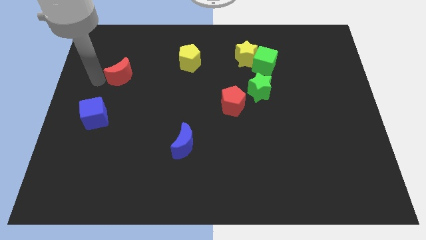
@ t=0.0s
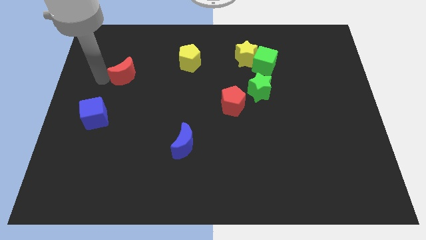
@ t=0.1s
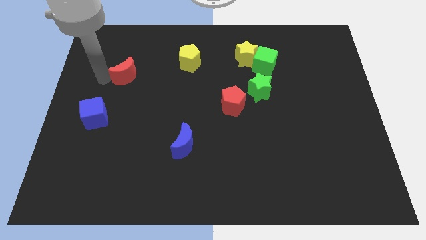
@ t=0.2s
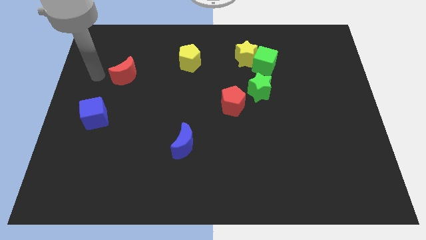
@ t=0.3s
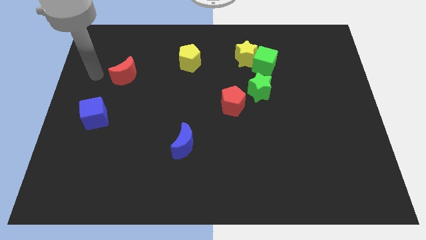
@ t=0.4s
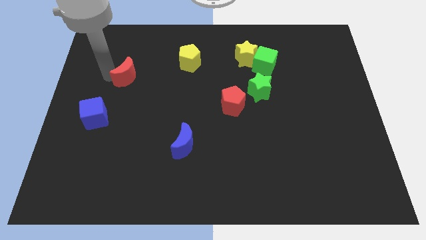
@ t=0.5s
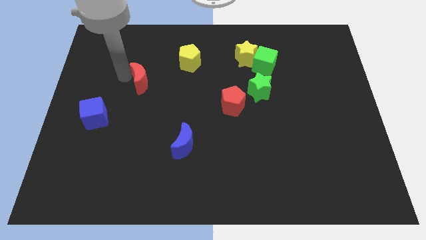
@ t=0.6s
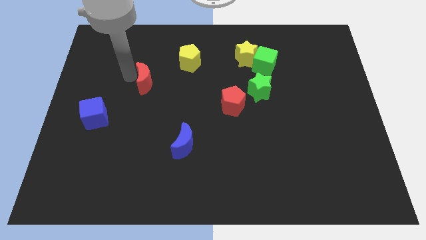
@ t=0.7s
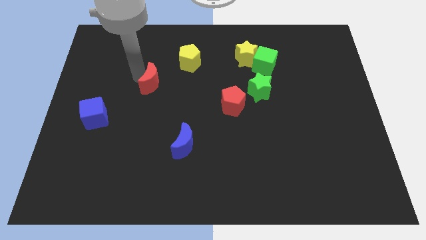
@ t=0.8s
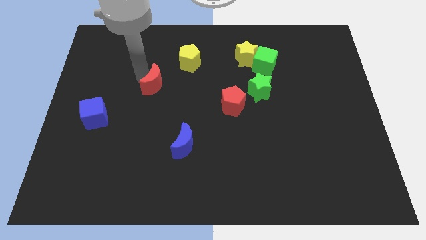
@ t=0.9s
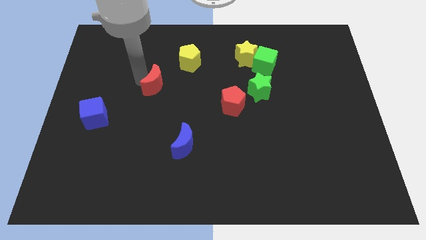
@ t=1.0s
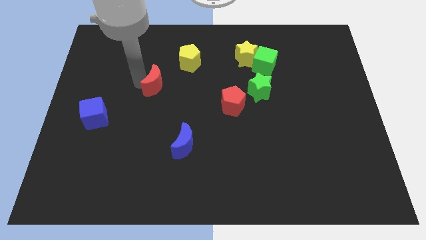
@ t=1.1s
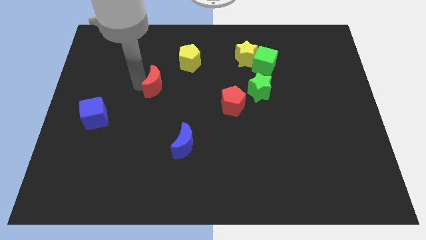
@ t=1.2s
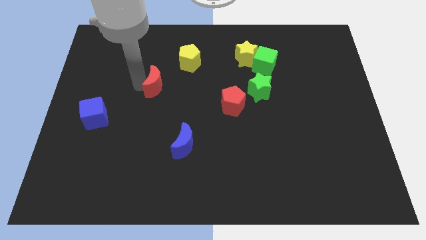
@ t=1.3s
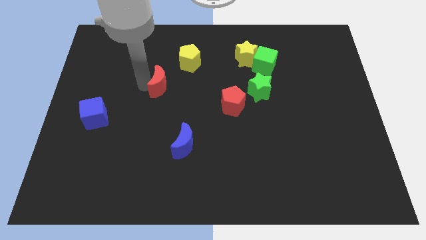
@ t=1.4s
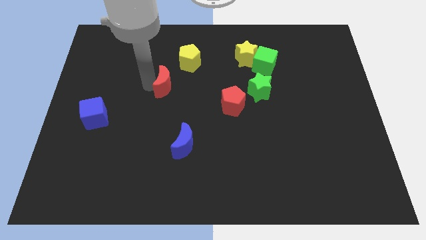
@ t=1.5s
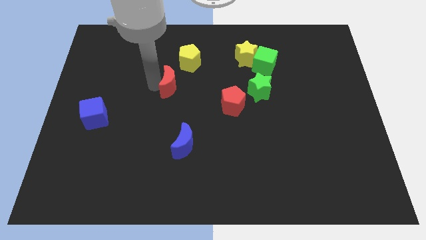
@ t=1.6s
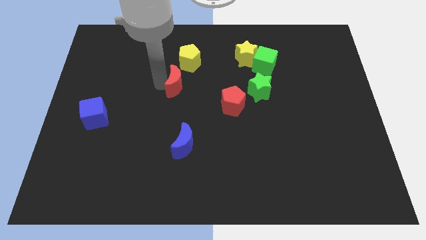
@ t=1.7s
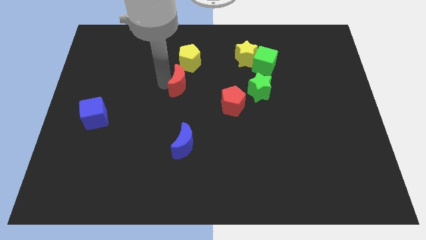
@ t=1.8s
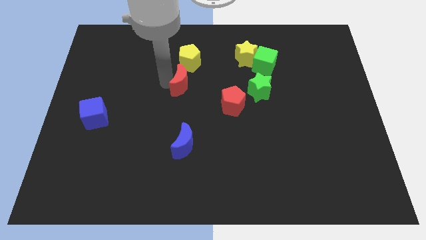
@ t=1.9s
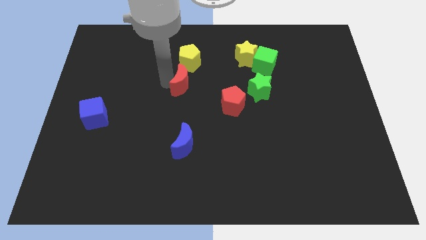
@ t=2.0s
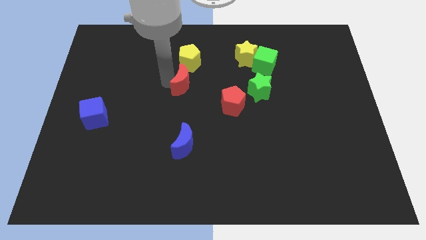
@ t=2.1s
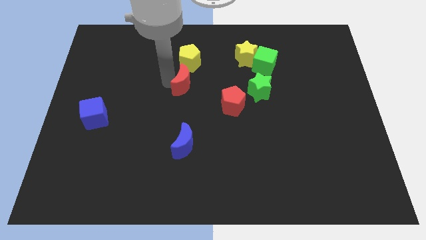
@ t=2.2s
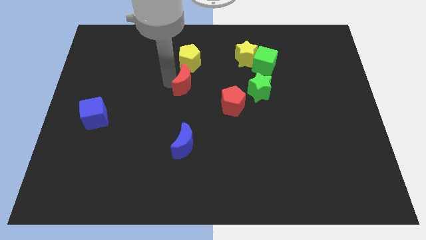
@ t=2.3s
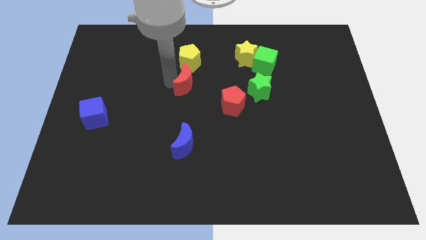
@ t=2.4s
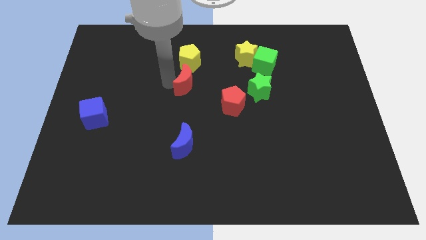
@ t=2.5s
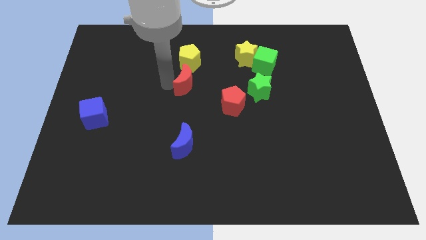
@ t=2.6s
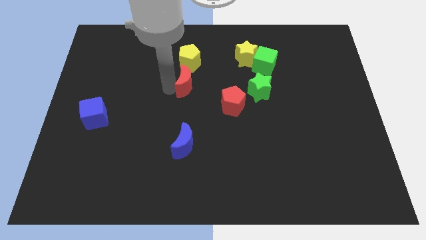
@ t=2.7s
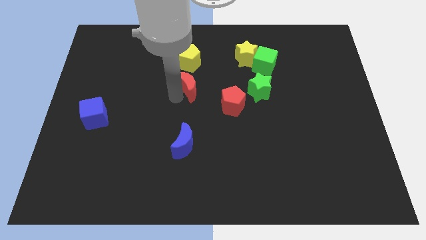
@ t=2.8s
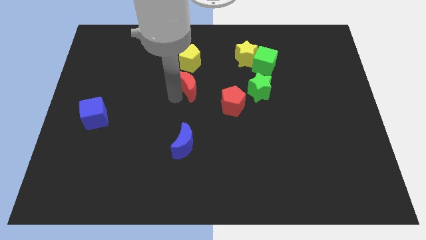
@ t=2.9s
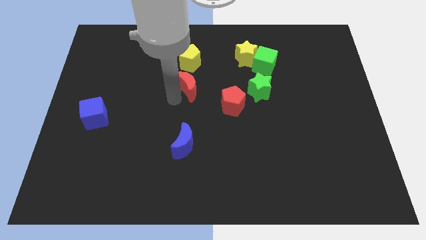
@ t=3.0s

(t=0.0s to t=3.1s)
move the red moon in between the yellow pentagon and the blue moon

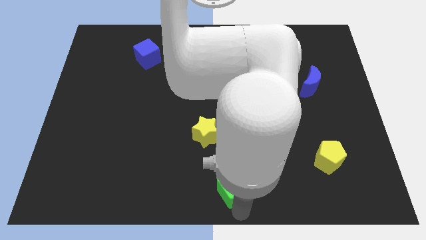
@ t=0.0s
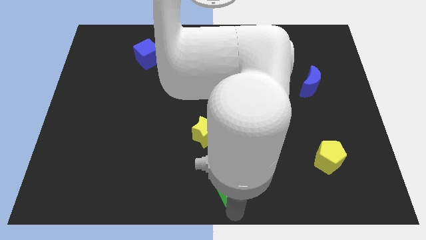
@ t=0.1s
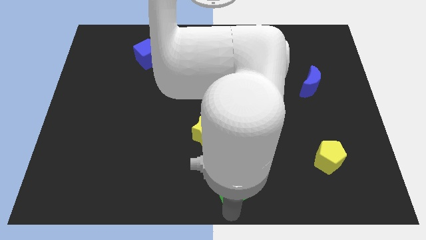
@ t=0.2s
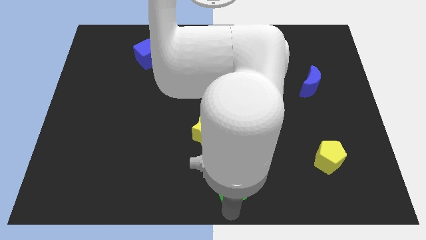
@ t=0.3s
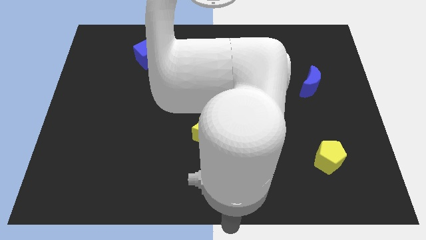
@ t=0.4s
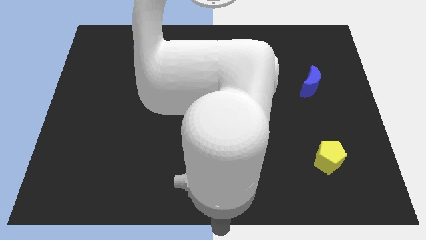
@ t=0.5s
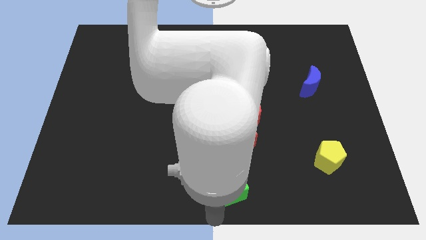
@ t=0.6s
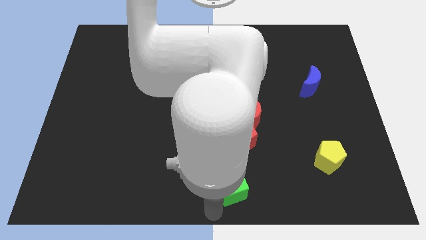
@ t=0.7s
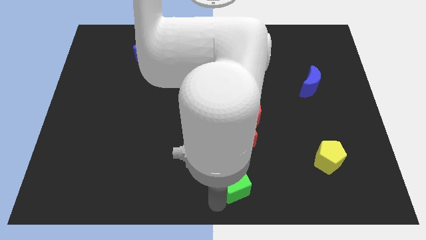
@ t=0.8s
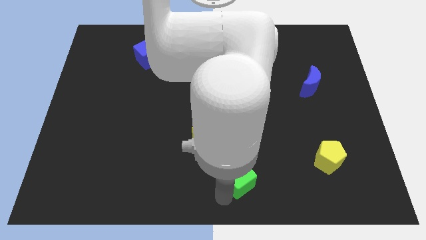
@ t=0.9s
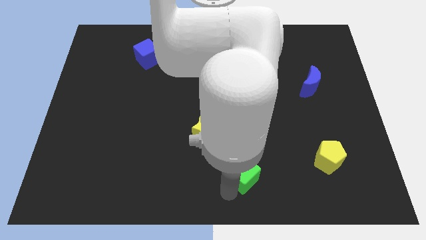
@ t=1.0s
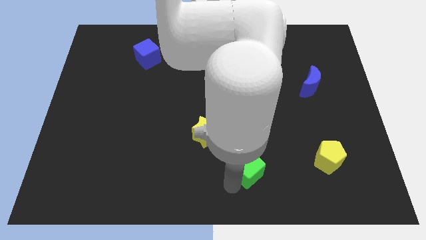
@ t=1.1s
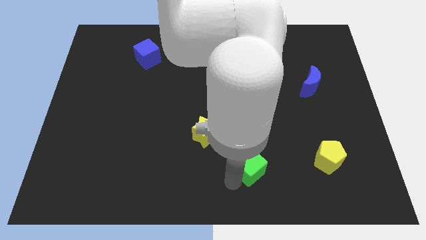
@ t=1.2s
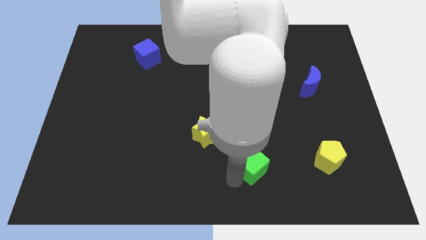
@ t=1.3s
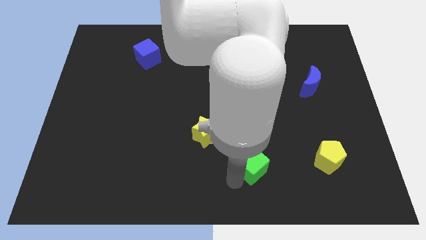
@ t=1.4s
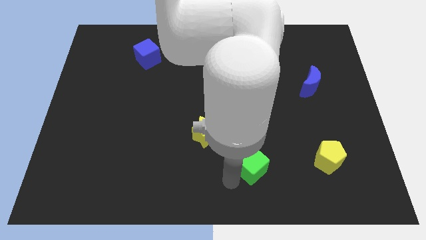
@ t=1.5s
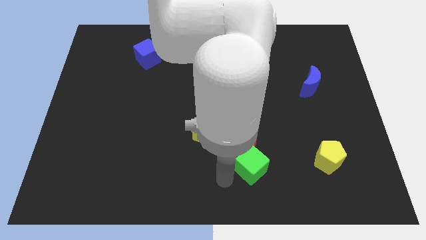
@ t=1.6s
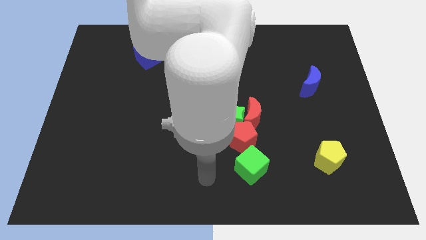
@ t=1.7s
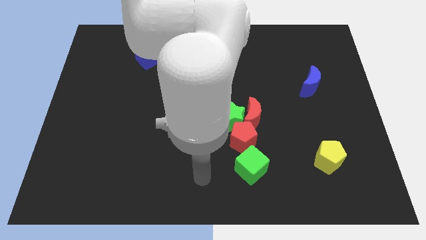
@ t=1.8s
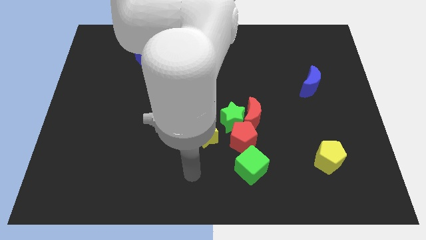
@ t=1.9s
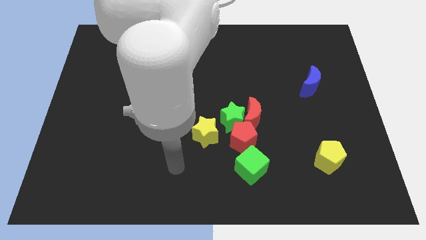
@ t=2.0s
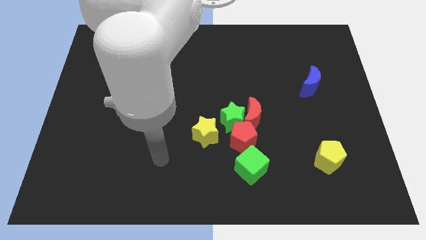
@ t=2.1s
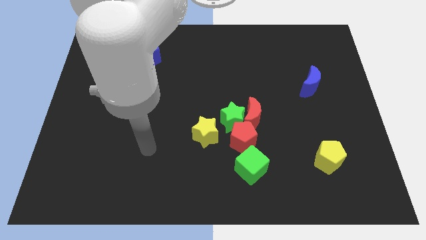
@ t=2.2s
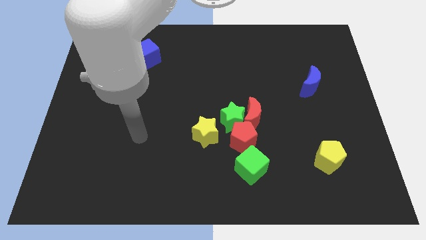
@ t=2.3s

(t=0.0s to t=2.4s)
slide green cube to the bottom of the red pentagon

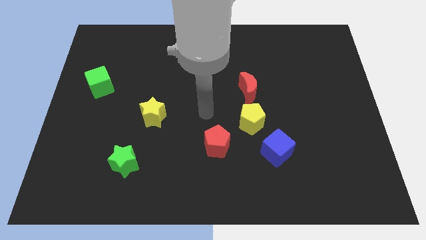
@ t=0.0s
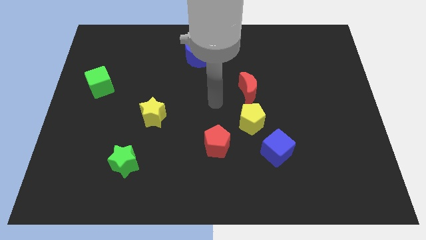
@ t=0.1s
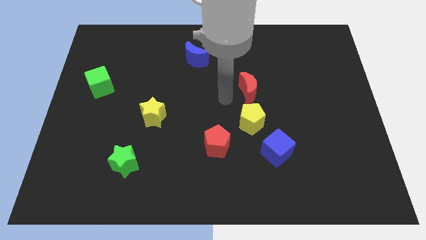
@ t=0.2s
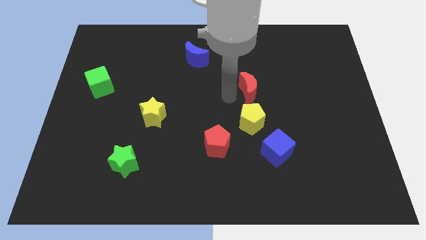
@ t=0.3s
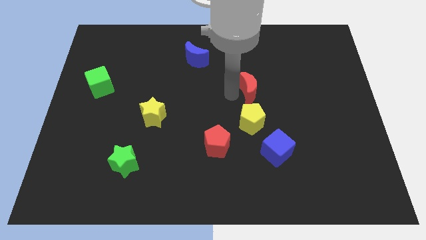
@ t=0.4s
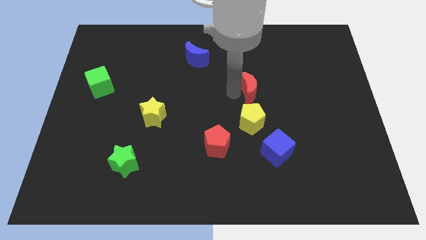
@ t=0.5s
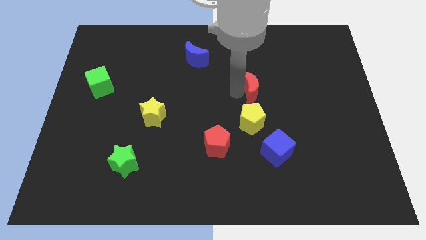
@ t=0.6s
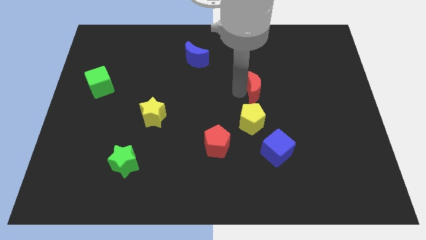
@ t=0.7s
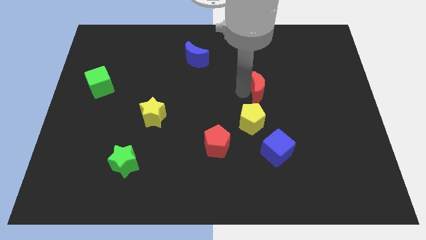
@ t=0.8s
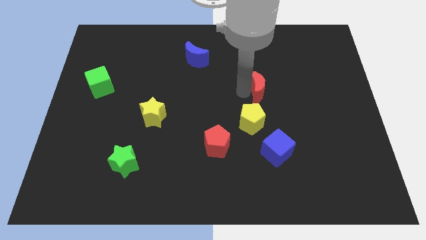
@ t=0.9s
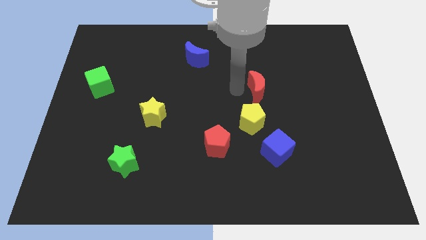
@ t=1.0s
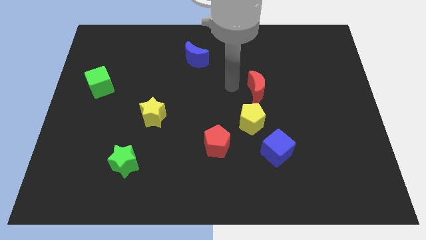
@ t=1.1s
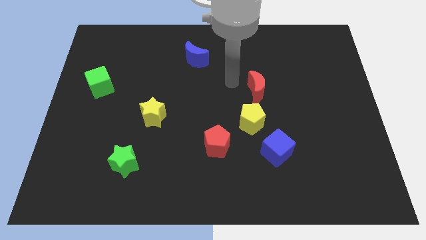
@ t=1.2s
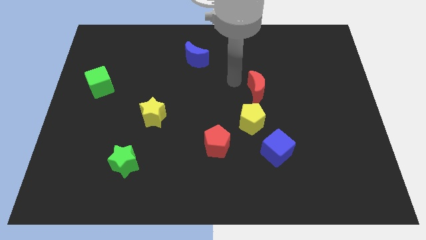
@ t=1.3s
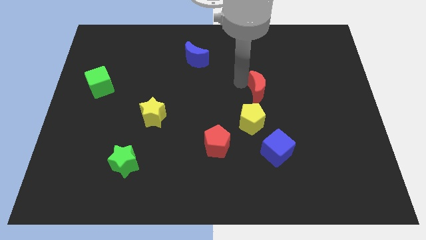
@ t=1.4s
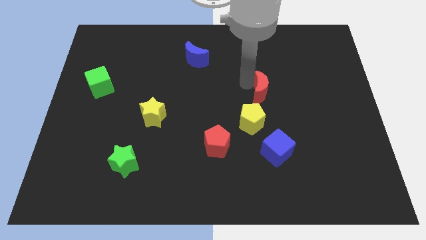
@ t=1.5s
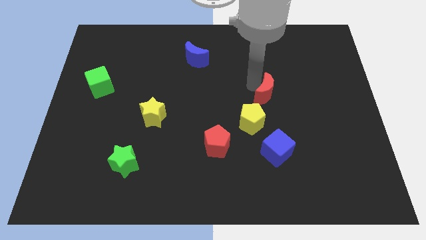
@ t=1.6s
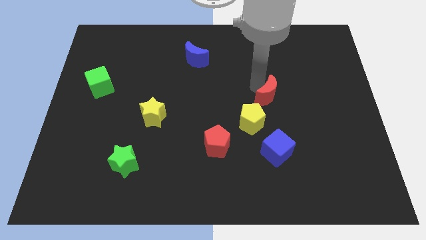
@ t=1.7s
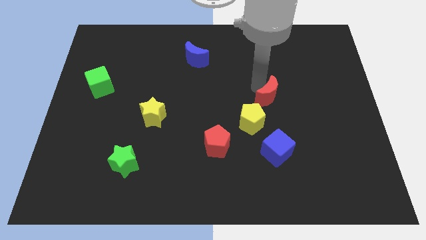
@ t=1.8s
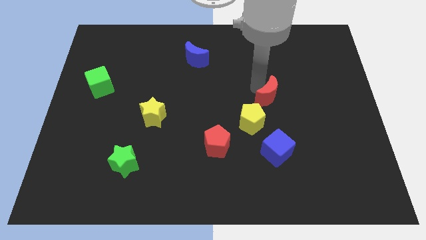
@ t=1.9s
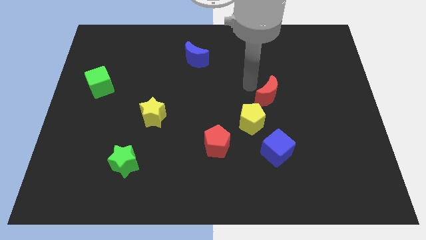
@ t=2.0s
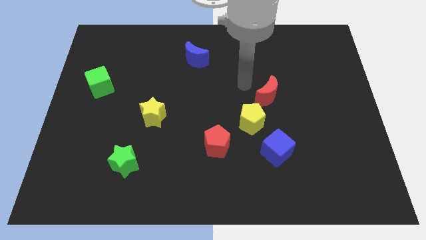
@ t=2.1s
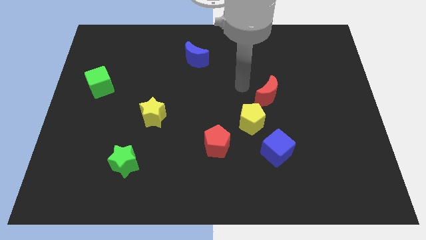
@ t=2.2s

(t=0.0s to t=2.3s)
move the red moon to the right slightly

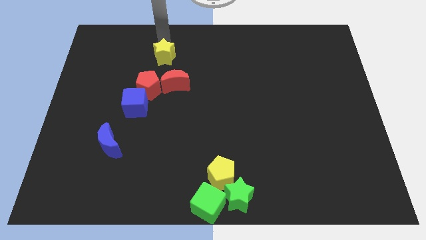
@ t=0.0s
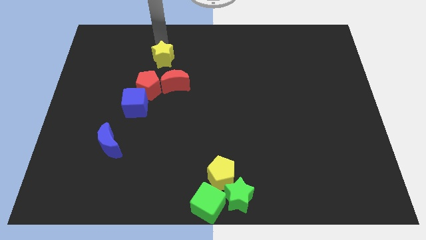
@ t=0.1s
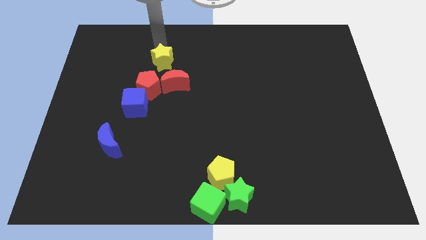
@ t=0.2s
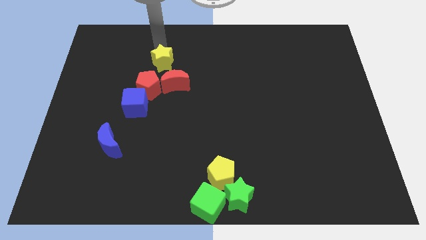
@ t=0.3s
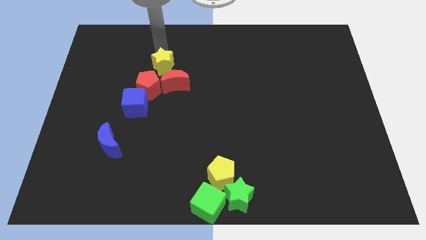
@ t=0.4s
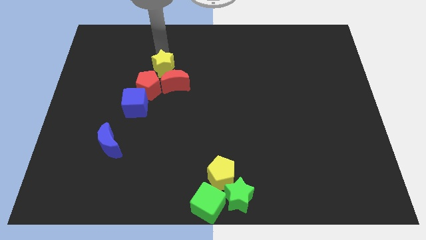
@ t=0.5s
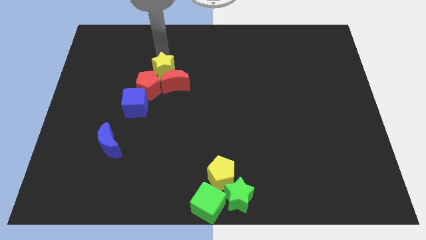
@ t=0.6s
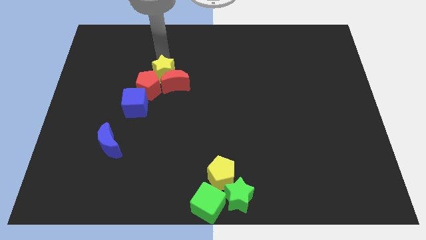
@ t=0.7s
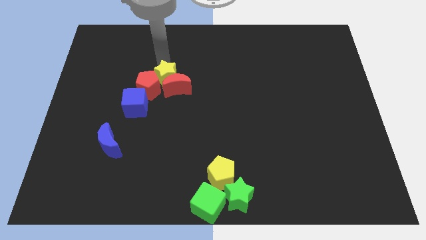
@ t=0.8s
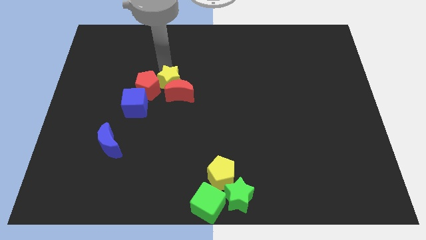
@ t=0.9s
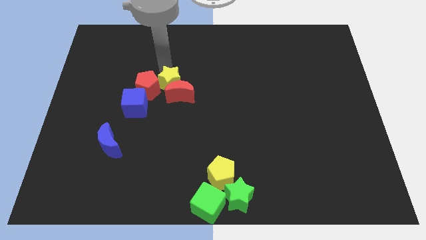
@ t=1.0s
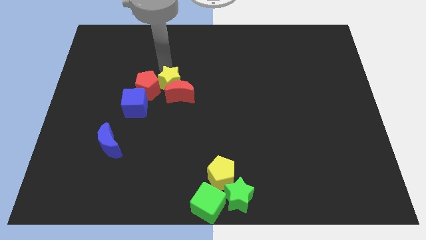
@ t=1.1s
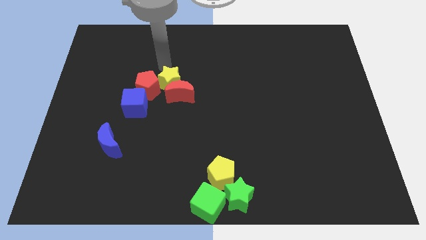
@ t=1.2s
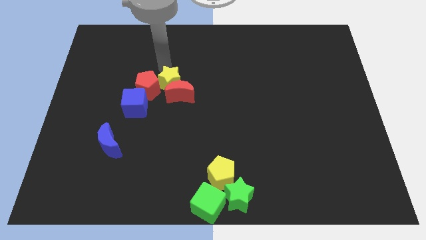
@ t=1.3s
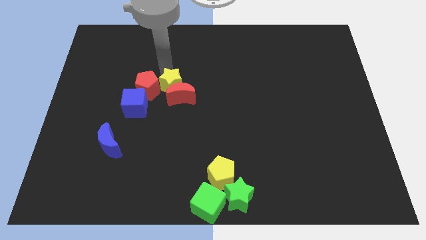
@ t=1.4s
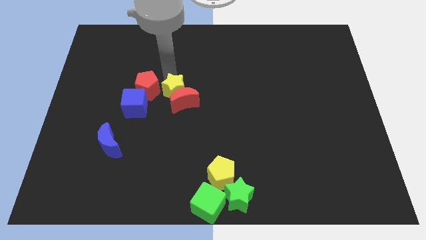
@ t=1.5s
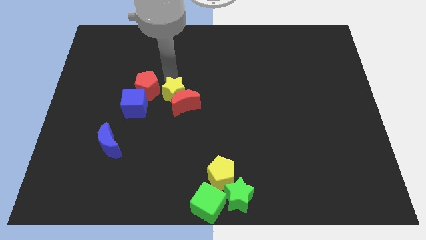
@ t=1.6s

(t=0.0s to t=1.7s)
push the yellow star into the red moon
